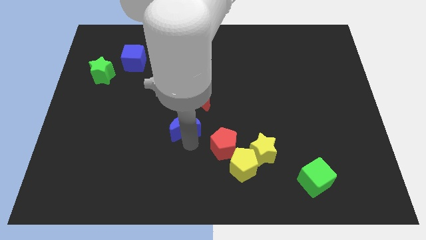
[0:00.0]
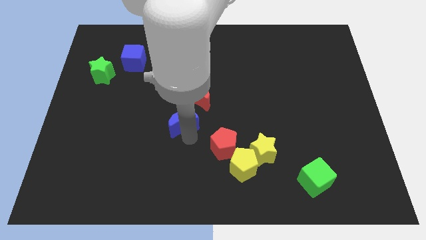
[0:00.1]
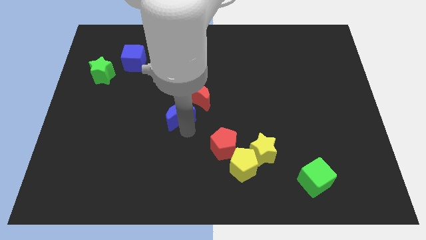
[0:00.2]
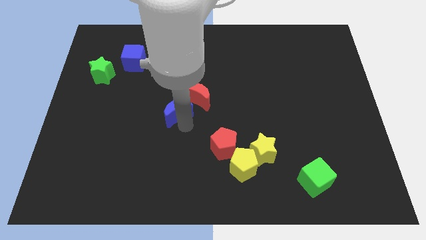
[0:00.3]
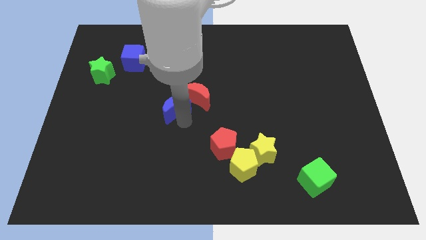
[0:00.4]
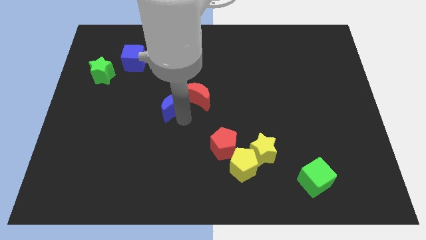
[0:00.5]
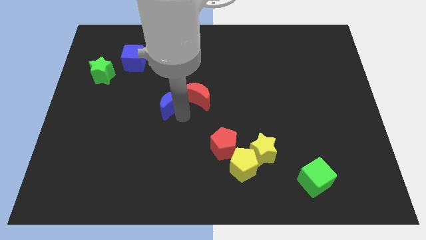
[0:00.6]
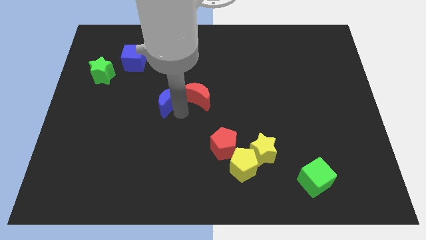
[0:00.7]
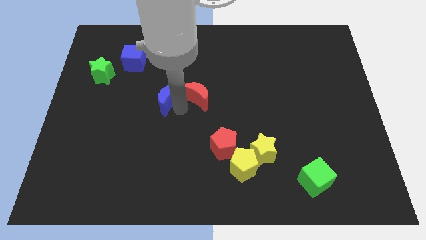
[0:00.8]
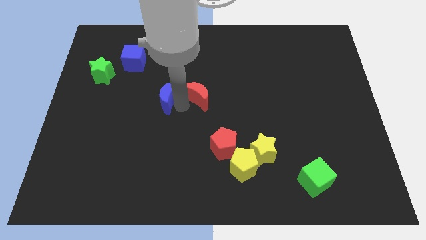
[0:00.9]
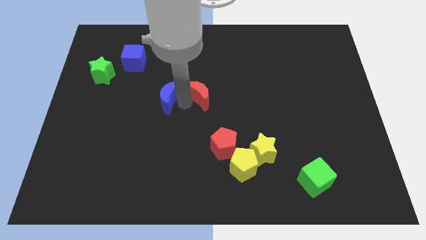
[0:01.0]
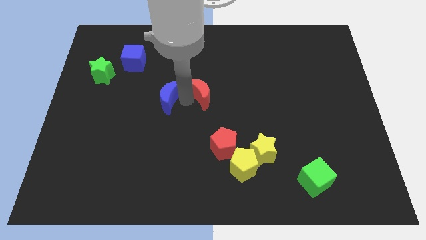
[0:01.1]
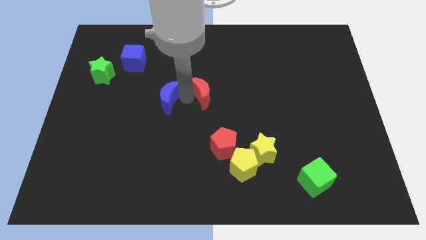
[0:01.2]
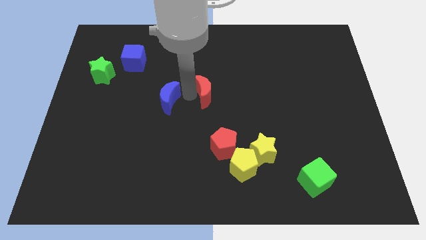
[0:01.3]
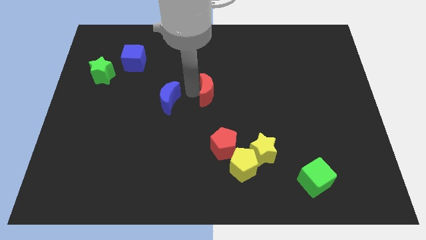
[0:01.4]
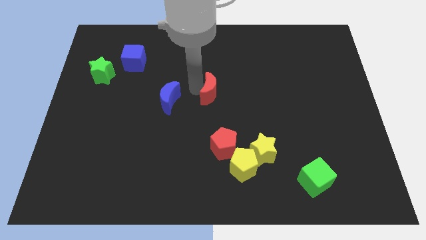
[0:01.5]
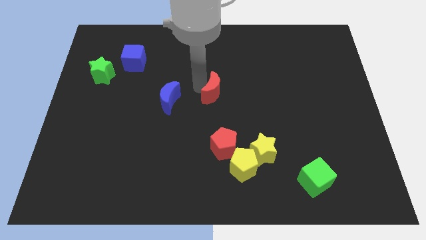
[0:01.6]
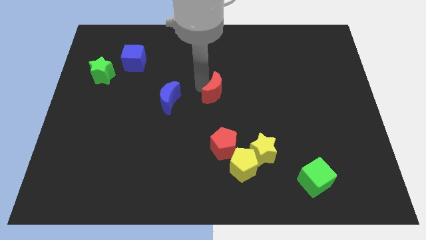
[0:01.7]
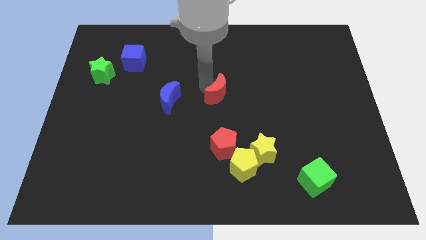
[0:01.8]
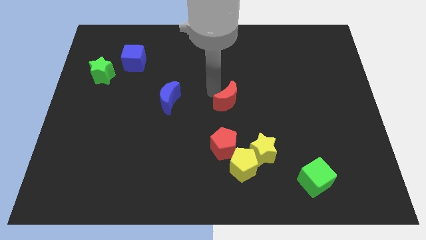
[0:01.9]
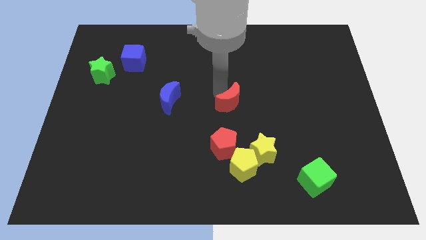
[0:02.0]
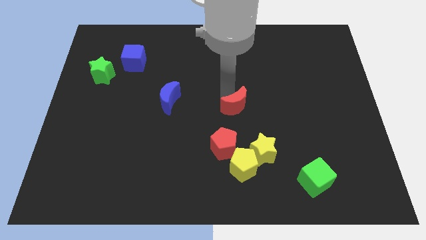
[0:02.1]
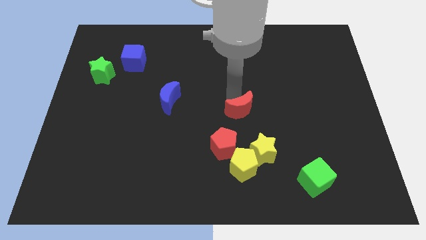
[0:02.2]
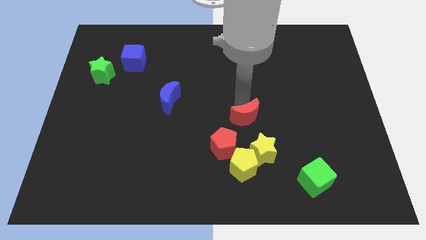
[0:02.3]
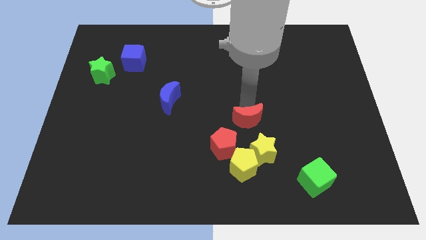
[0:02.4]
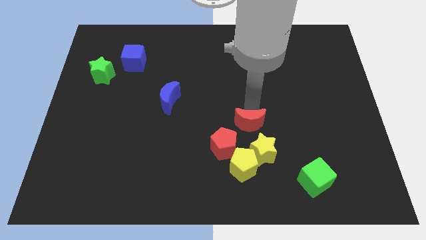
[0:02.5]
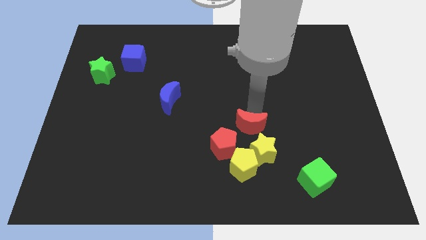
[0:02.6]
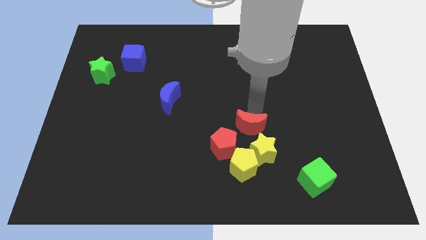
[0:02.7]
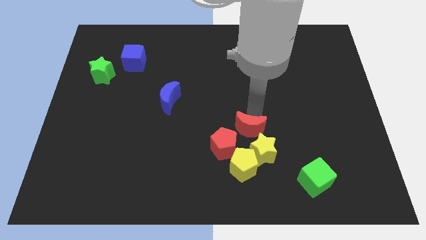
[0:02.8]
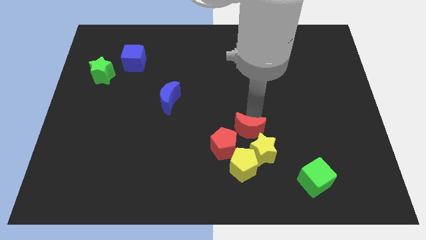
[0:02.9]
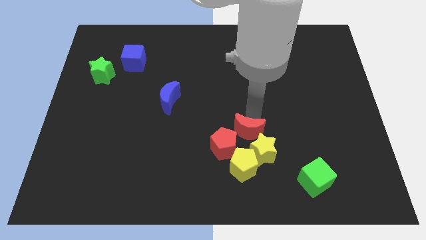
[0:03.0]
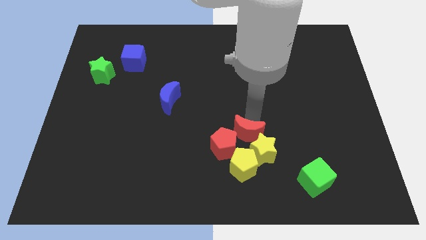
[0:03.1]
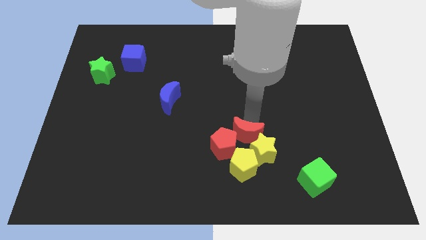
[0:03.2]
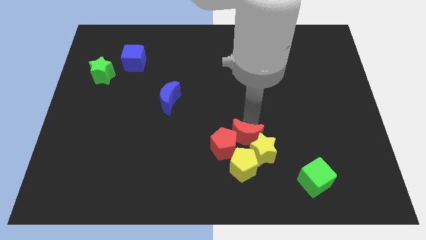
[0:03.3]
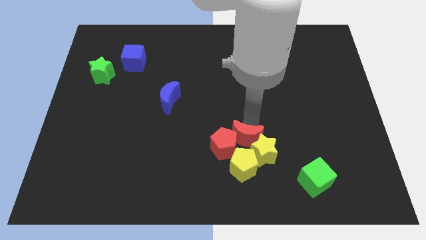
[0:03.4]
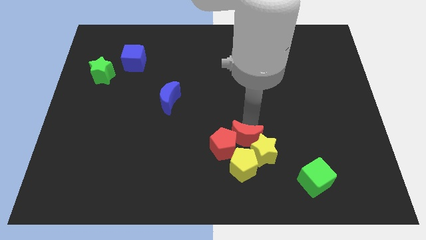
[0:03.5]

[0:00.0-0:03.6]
place the red moon to the top left of the yellow star

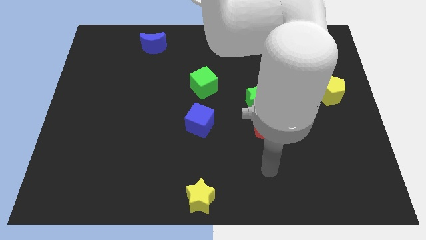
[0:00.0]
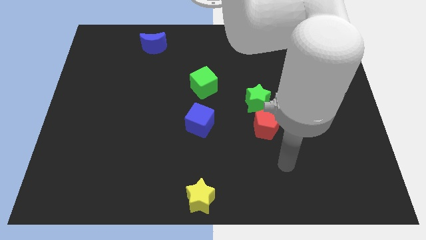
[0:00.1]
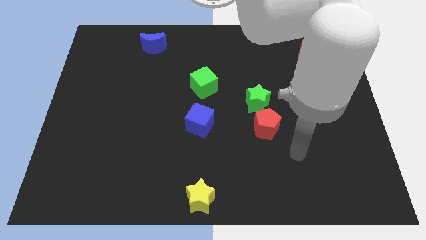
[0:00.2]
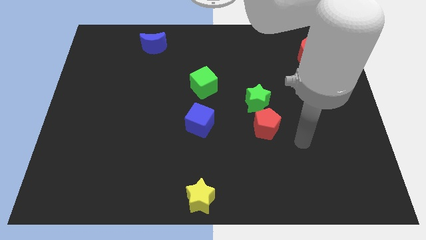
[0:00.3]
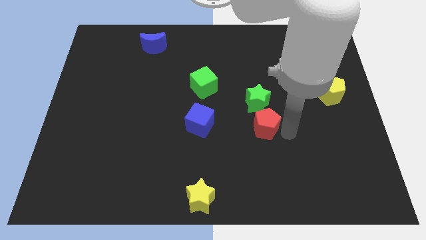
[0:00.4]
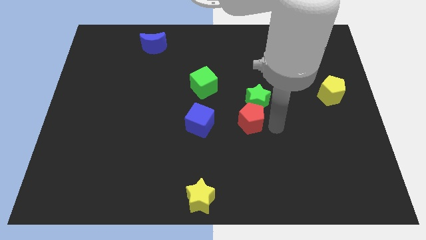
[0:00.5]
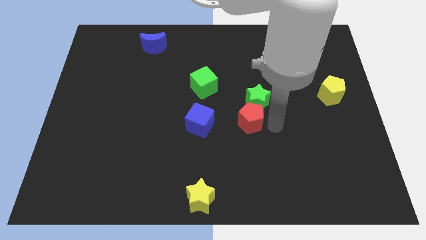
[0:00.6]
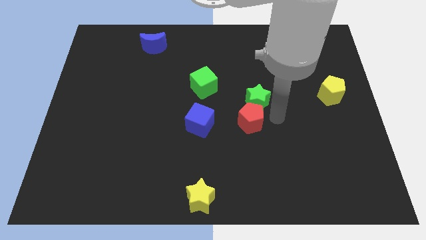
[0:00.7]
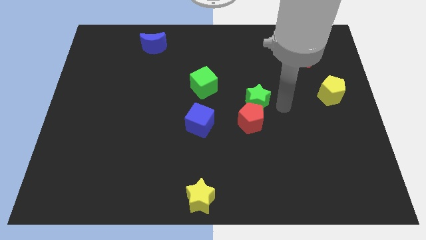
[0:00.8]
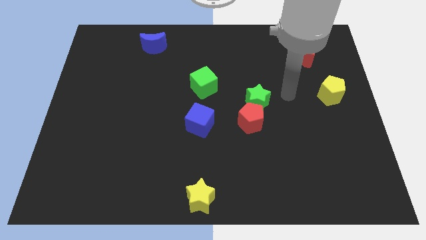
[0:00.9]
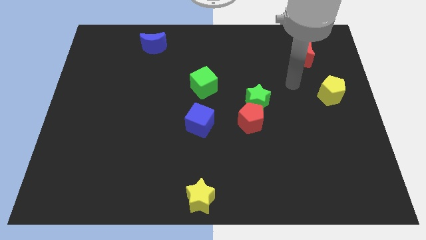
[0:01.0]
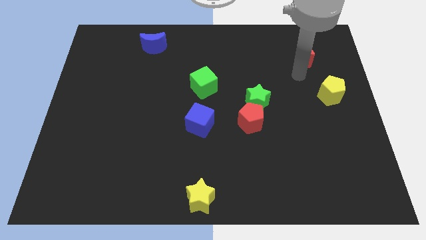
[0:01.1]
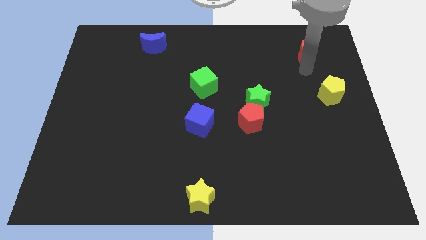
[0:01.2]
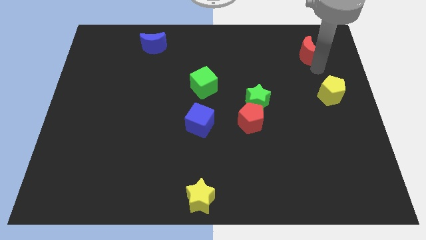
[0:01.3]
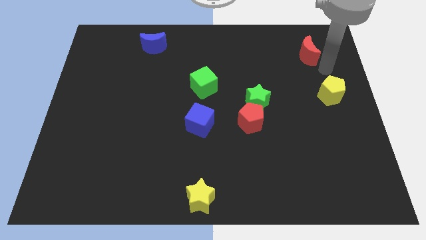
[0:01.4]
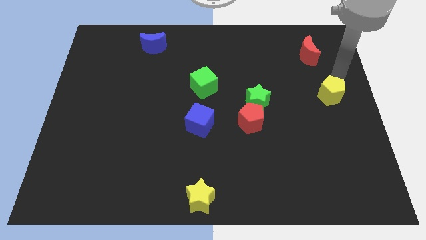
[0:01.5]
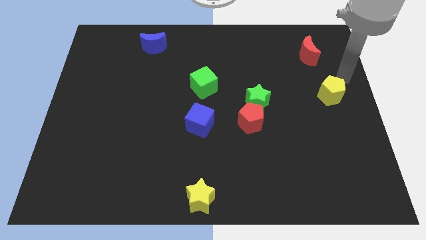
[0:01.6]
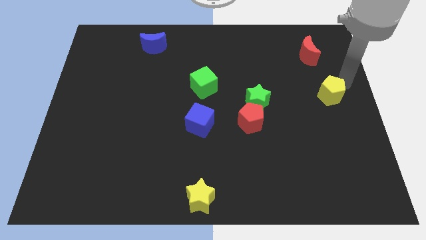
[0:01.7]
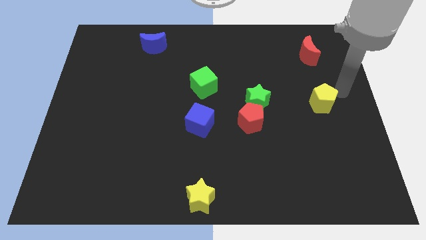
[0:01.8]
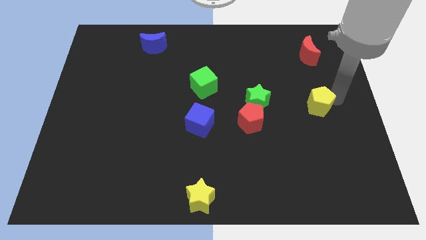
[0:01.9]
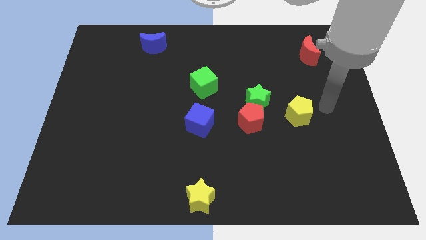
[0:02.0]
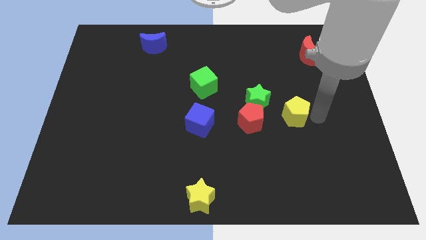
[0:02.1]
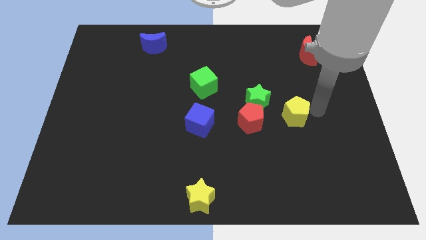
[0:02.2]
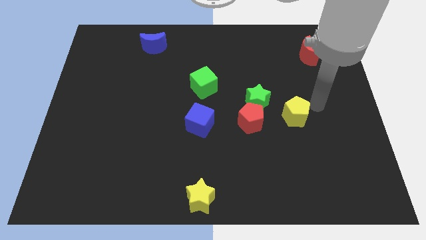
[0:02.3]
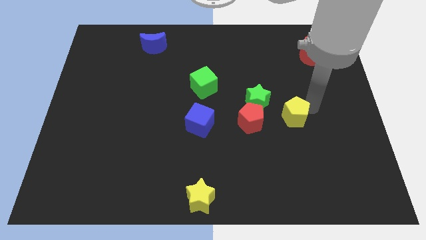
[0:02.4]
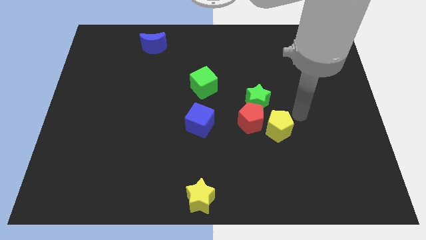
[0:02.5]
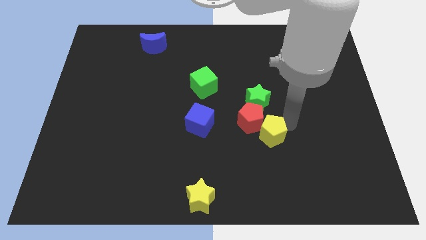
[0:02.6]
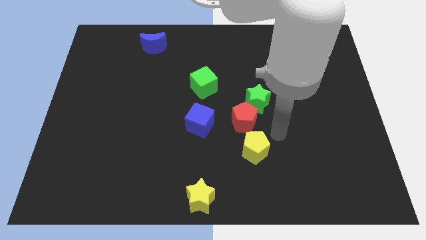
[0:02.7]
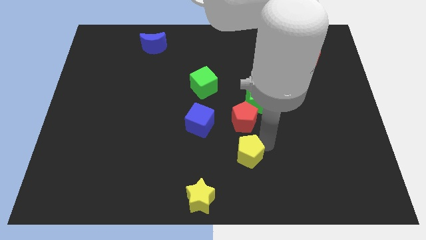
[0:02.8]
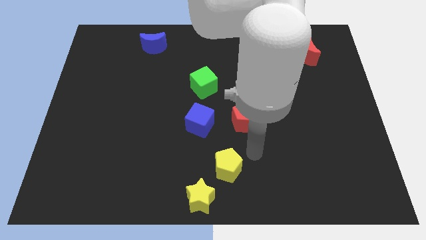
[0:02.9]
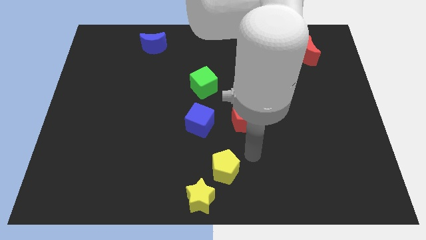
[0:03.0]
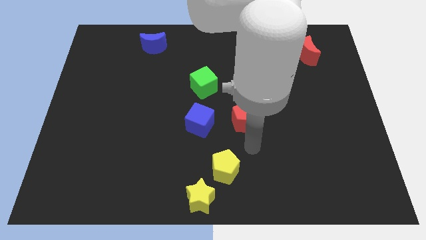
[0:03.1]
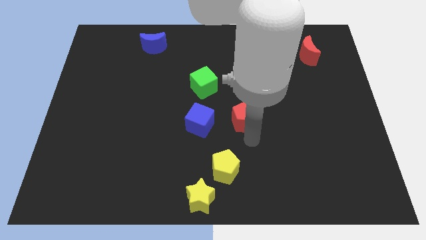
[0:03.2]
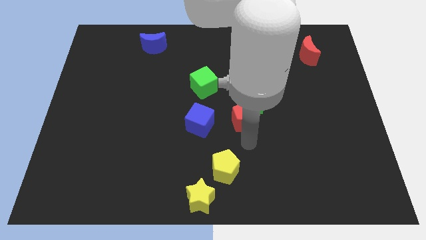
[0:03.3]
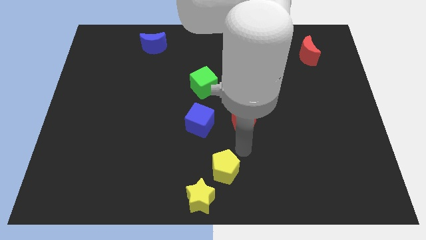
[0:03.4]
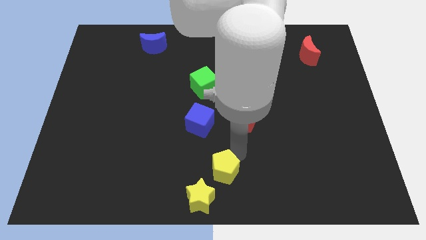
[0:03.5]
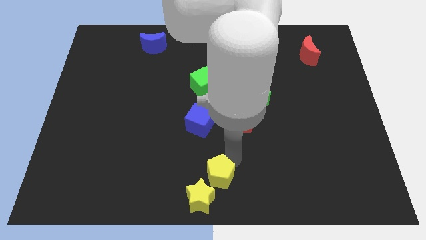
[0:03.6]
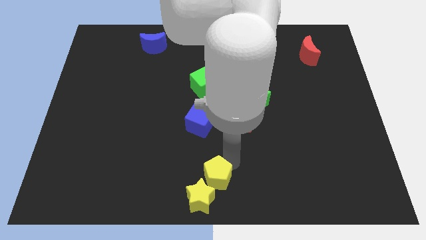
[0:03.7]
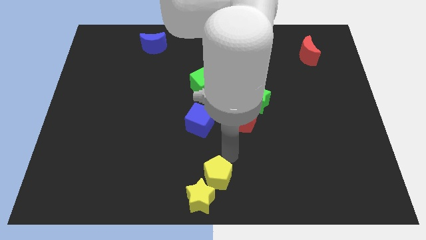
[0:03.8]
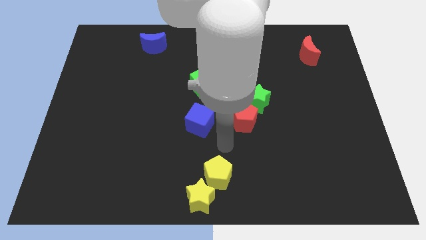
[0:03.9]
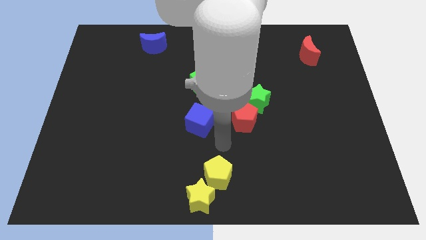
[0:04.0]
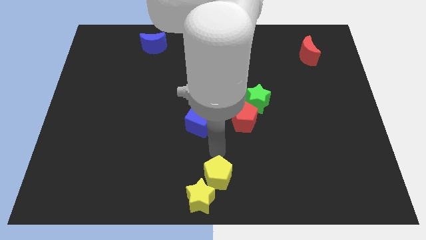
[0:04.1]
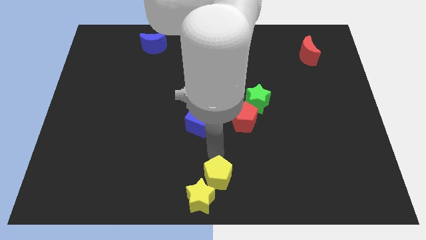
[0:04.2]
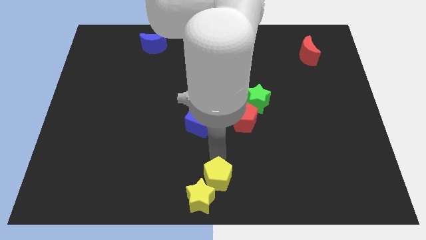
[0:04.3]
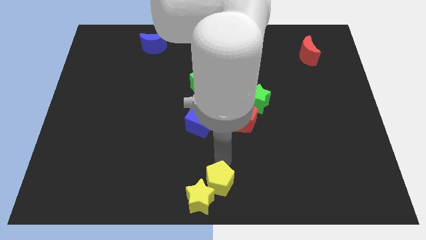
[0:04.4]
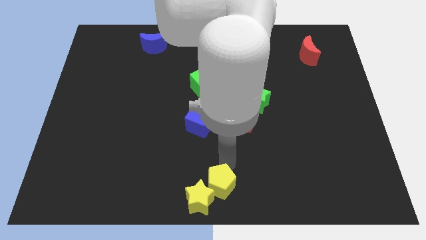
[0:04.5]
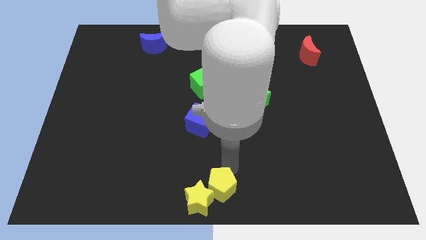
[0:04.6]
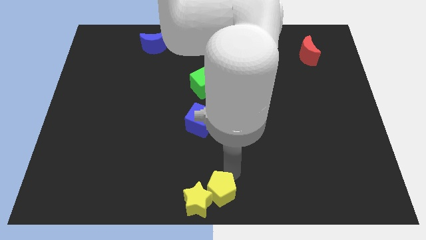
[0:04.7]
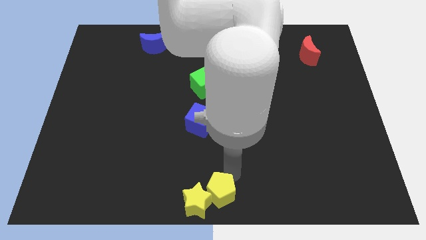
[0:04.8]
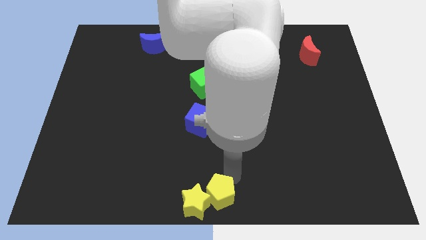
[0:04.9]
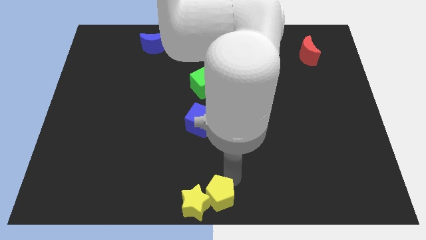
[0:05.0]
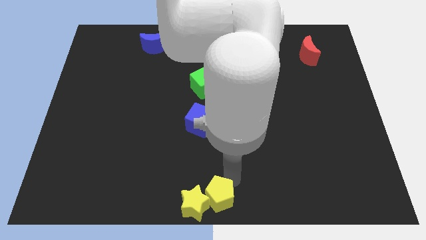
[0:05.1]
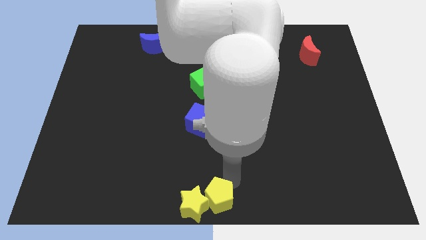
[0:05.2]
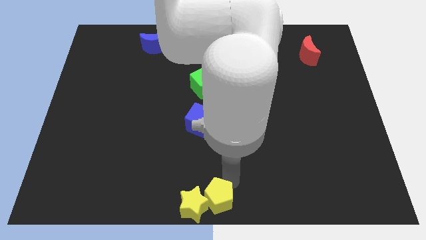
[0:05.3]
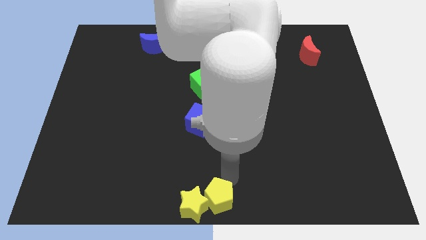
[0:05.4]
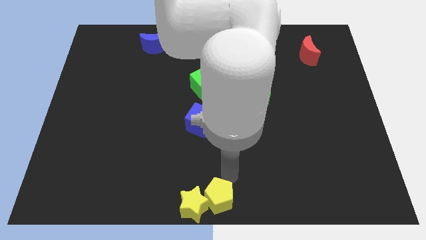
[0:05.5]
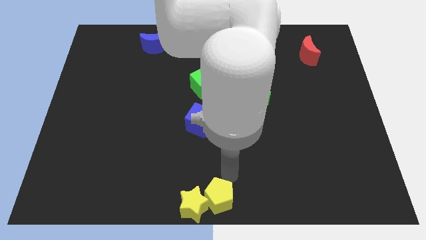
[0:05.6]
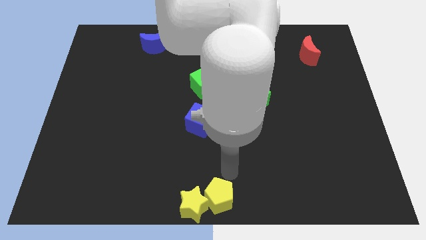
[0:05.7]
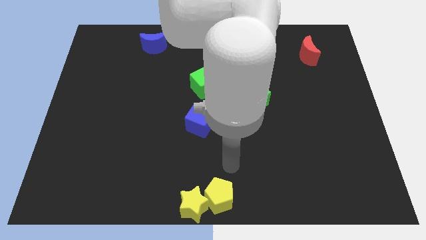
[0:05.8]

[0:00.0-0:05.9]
group up the yellow blocks at the bottom center of the board
